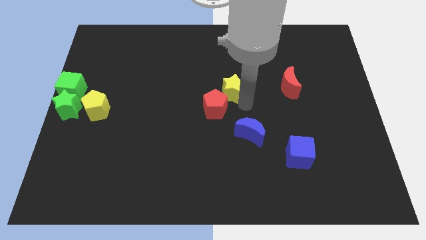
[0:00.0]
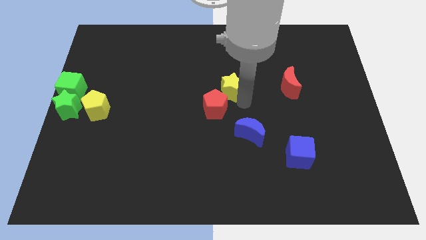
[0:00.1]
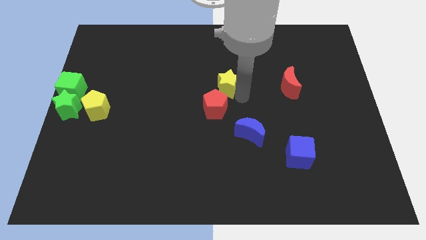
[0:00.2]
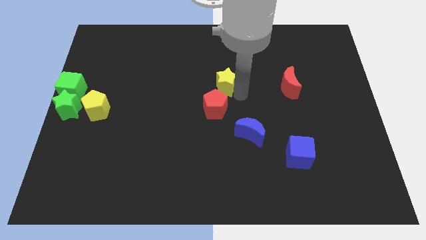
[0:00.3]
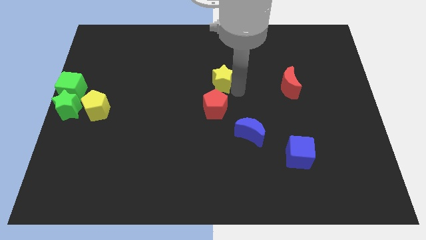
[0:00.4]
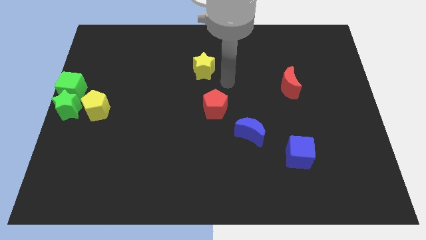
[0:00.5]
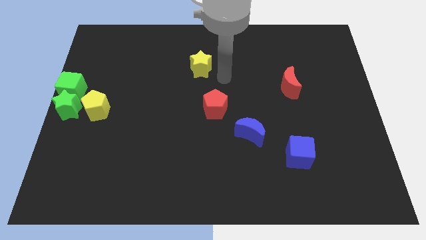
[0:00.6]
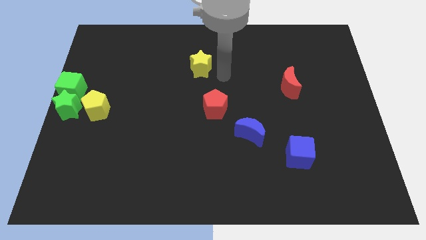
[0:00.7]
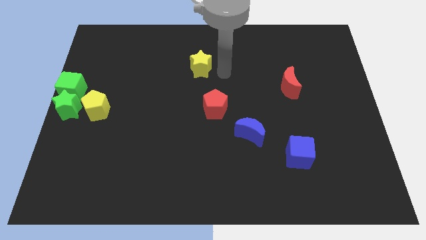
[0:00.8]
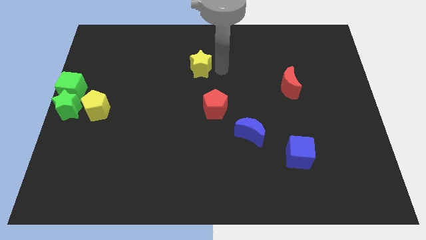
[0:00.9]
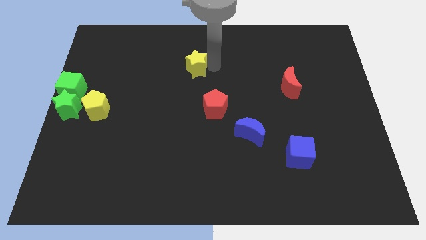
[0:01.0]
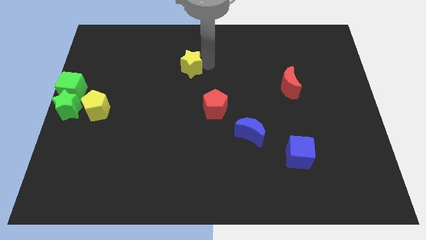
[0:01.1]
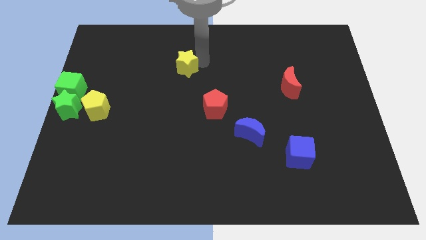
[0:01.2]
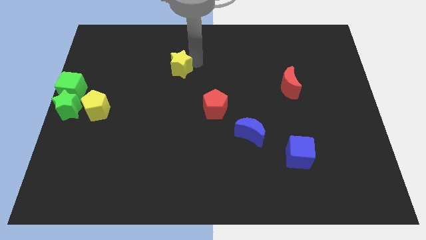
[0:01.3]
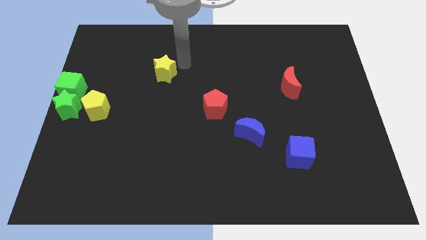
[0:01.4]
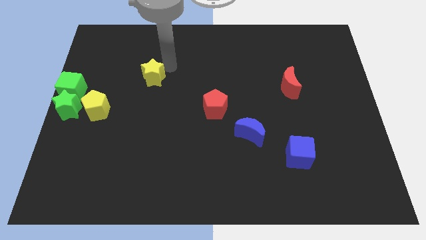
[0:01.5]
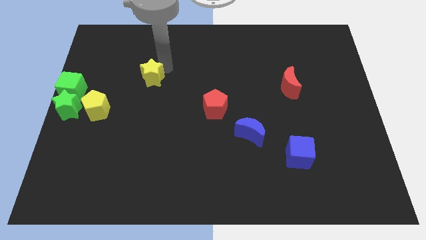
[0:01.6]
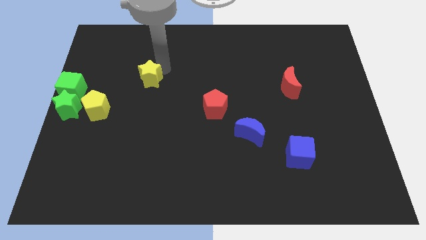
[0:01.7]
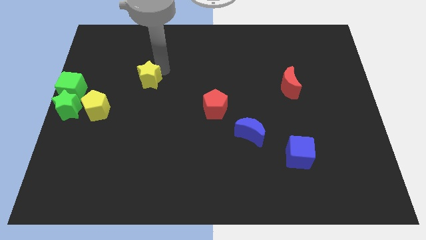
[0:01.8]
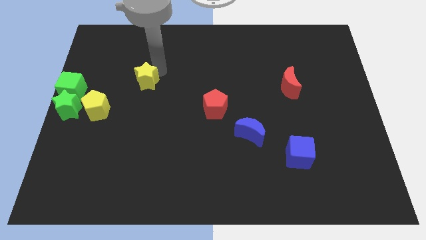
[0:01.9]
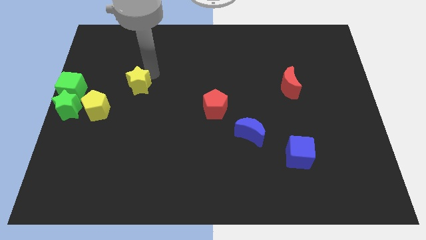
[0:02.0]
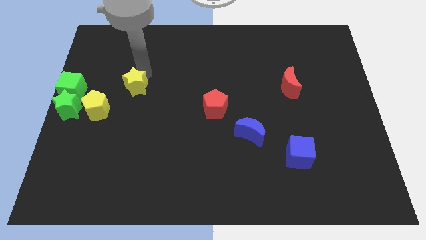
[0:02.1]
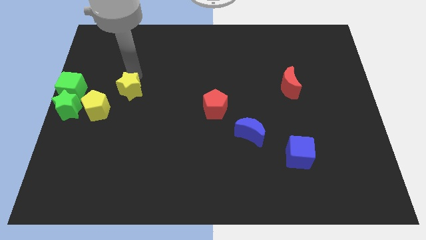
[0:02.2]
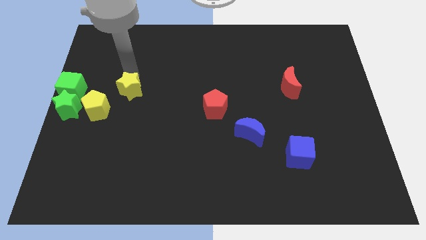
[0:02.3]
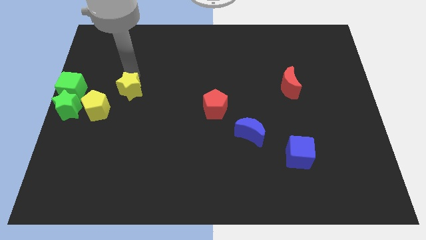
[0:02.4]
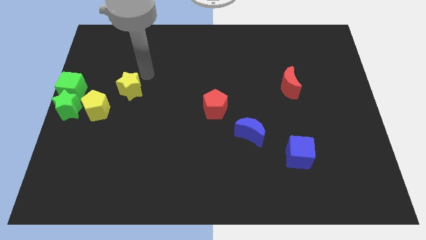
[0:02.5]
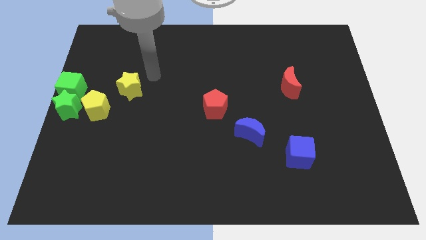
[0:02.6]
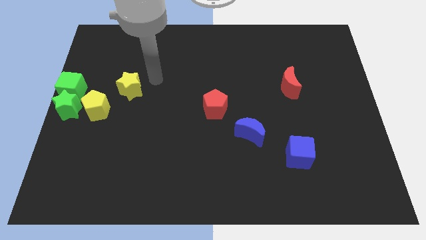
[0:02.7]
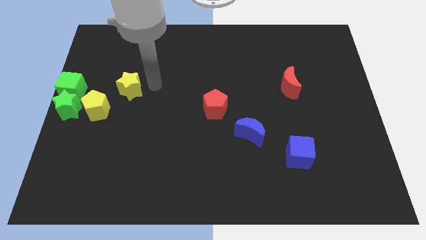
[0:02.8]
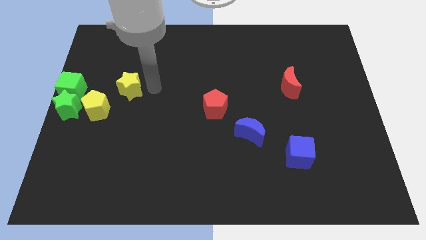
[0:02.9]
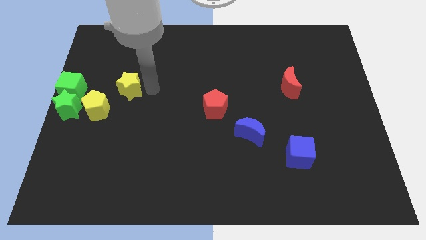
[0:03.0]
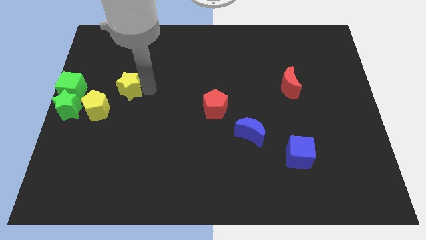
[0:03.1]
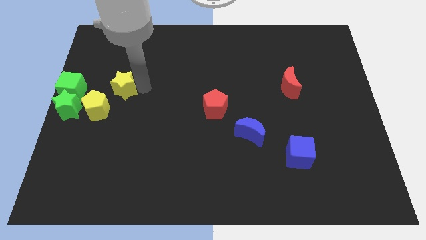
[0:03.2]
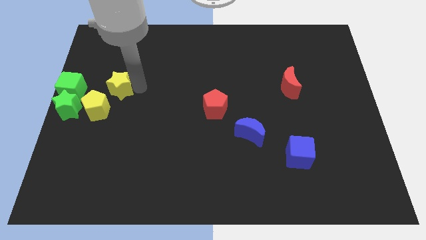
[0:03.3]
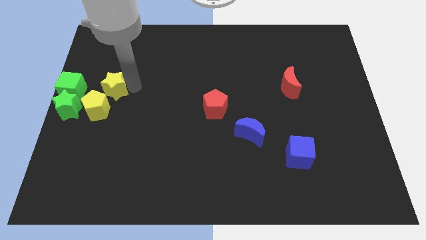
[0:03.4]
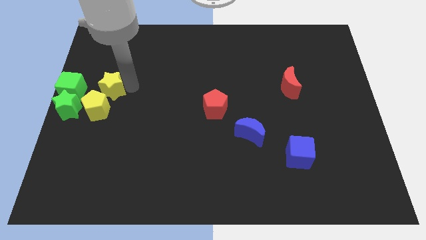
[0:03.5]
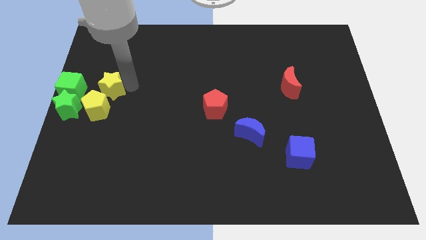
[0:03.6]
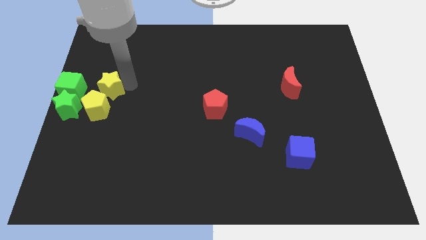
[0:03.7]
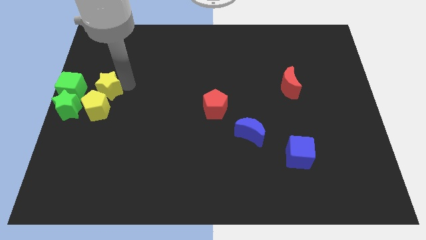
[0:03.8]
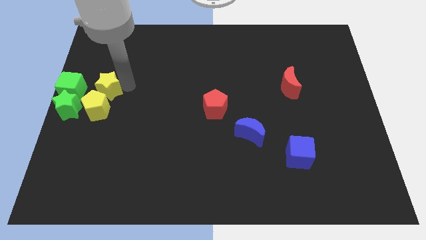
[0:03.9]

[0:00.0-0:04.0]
move the yellow star to the right side of the green cube

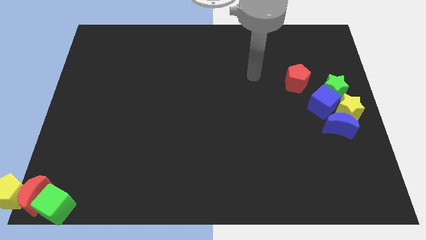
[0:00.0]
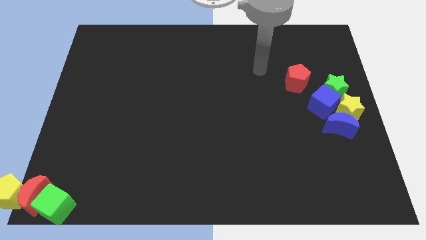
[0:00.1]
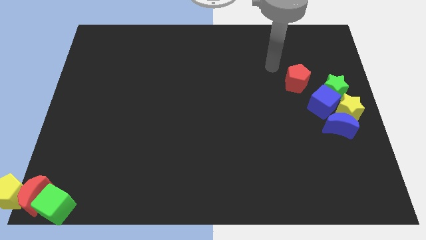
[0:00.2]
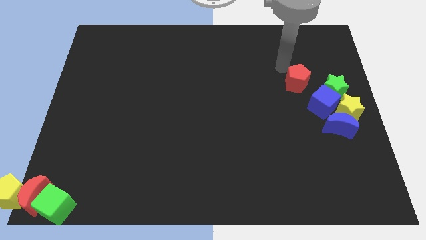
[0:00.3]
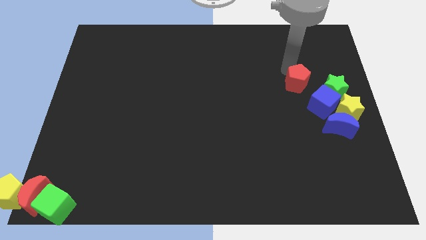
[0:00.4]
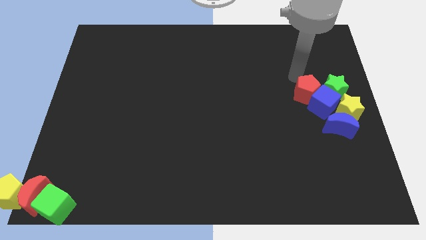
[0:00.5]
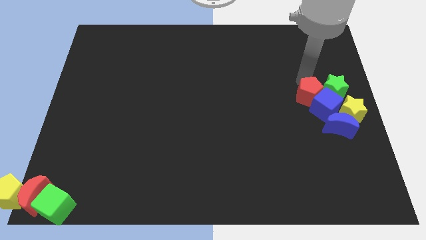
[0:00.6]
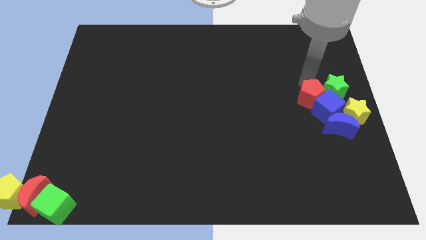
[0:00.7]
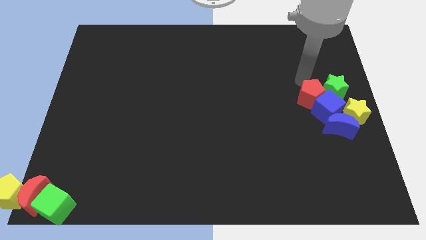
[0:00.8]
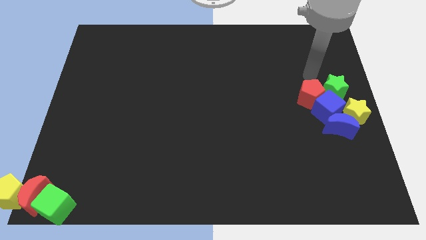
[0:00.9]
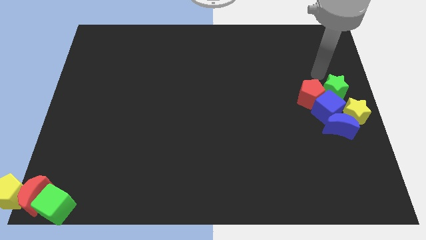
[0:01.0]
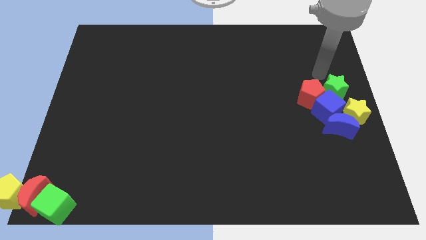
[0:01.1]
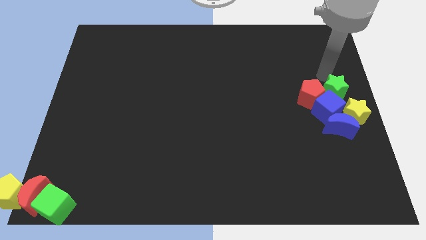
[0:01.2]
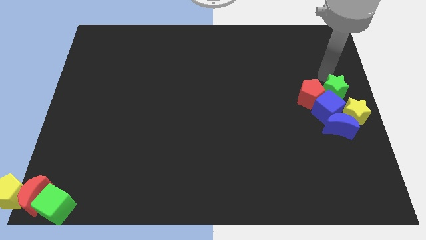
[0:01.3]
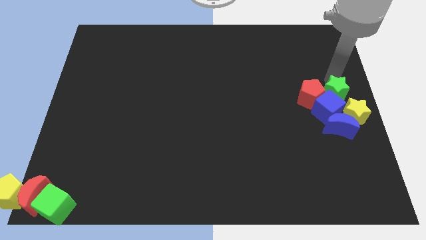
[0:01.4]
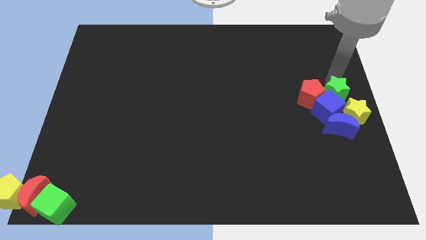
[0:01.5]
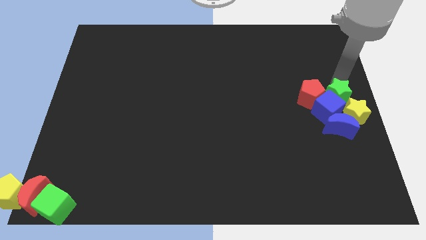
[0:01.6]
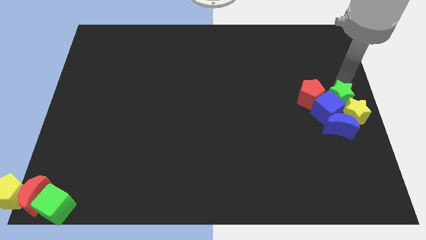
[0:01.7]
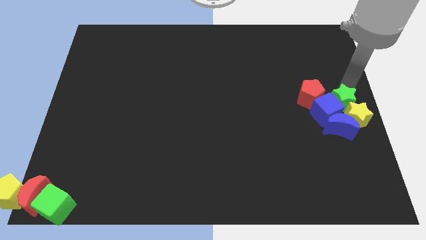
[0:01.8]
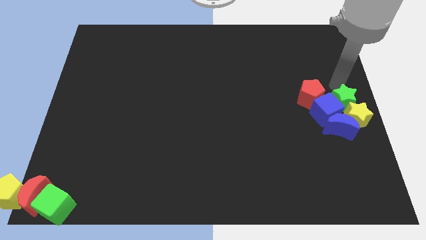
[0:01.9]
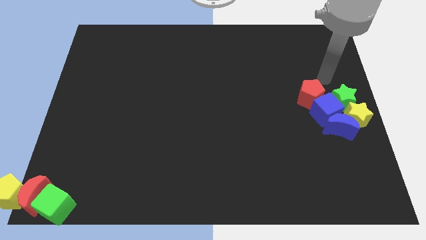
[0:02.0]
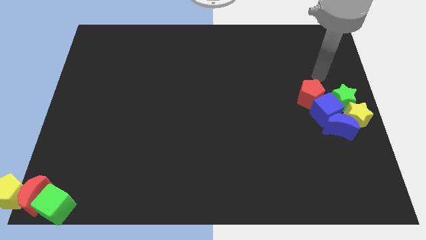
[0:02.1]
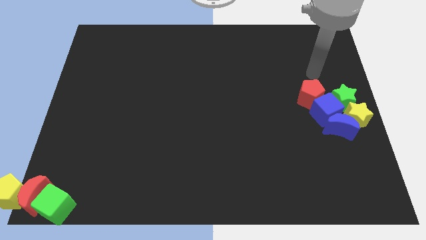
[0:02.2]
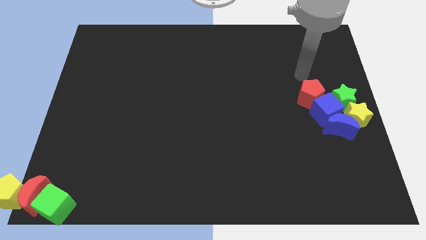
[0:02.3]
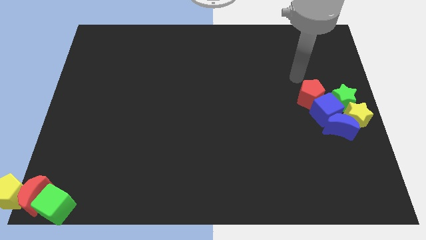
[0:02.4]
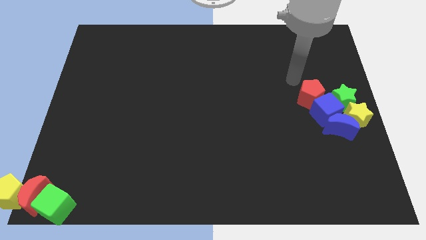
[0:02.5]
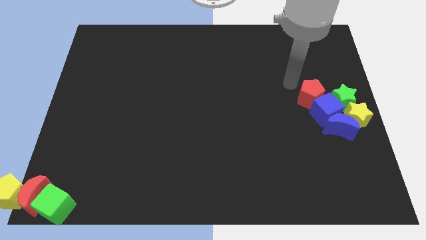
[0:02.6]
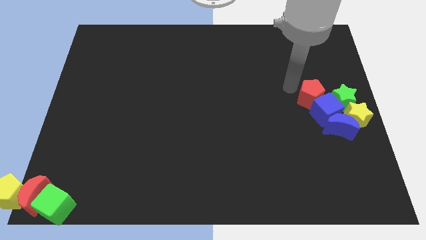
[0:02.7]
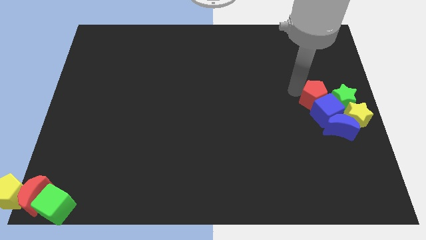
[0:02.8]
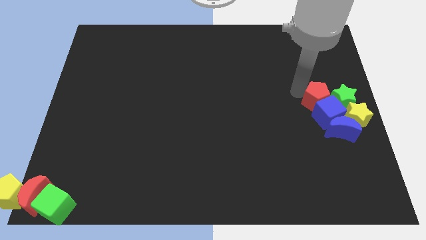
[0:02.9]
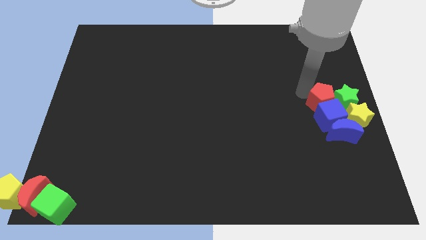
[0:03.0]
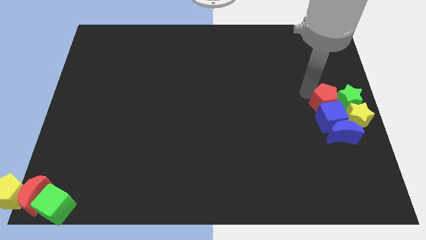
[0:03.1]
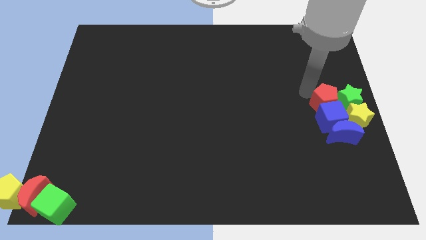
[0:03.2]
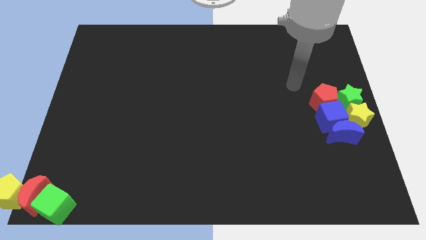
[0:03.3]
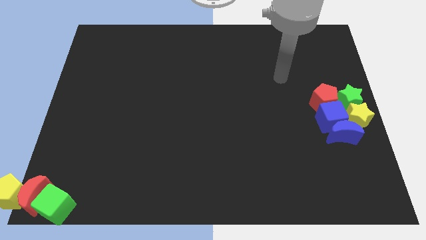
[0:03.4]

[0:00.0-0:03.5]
push the group of blocks on the right side to the center right of the board

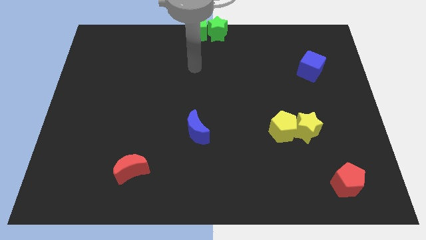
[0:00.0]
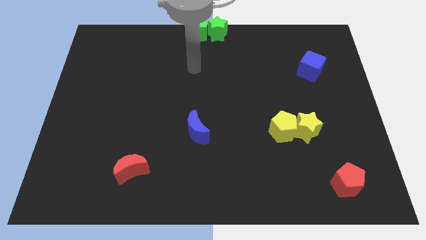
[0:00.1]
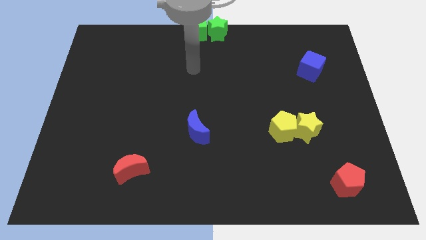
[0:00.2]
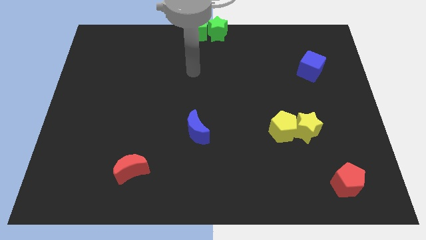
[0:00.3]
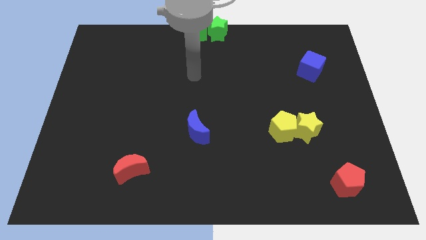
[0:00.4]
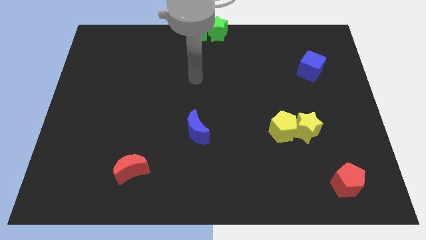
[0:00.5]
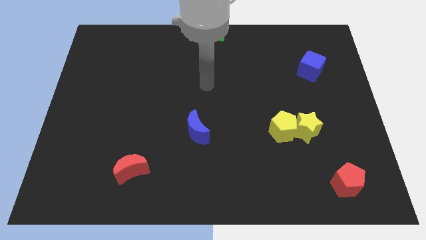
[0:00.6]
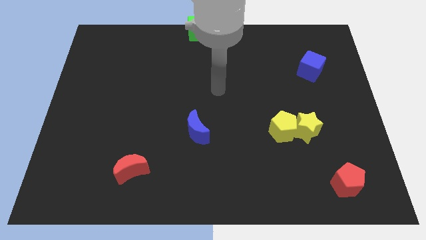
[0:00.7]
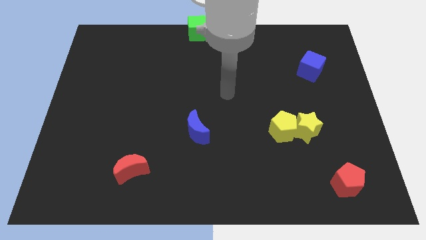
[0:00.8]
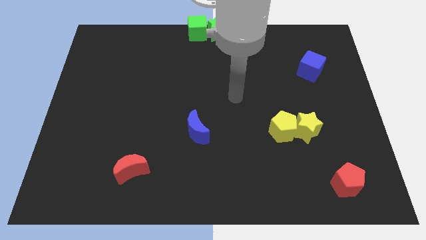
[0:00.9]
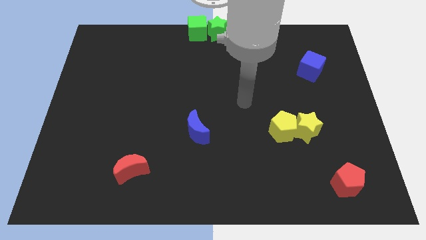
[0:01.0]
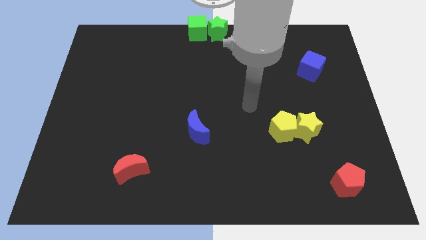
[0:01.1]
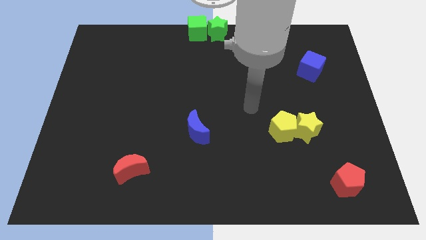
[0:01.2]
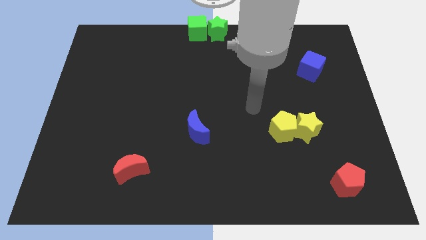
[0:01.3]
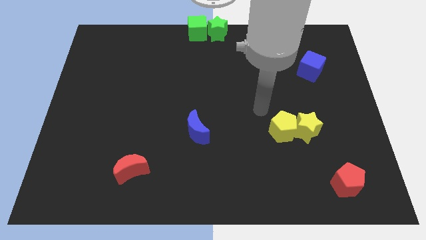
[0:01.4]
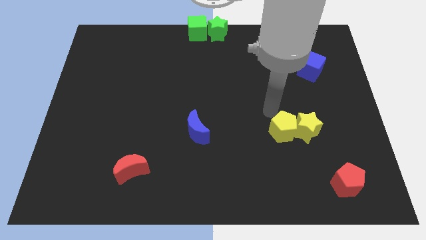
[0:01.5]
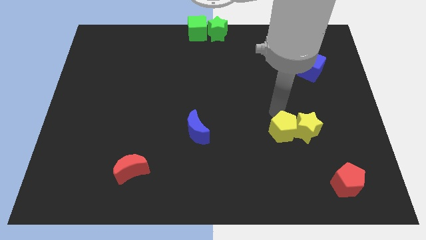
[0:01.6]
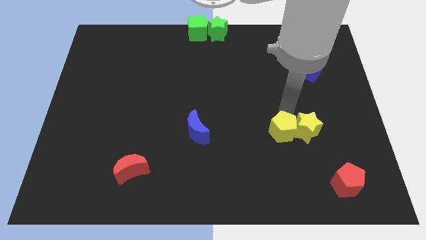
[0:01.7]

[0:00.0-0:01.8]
place your arm to the top of yellow pentagon
